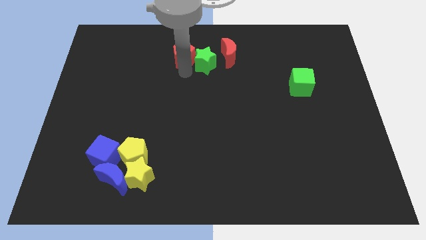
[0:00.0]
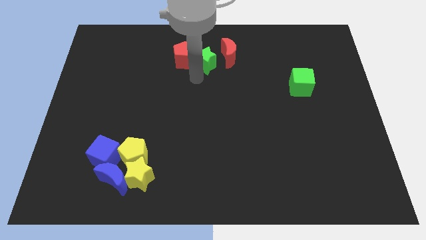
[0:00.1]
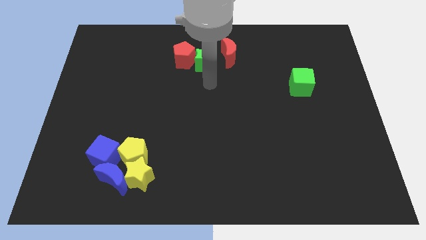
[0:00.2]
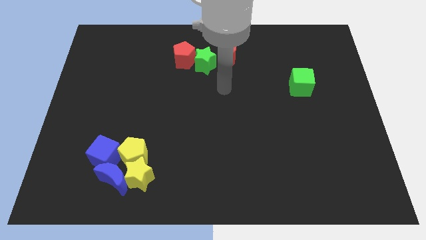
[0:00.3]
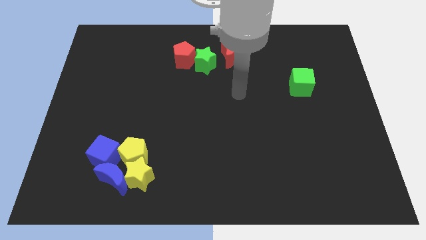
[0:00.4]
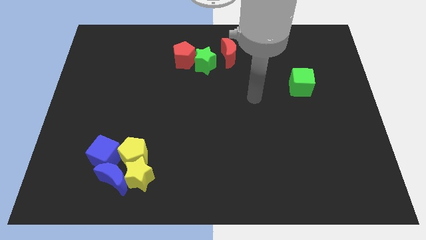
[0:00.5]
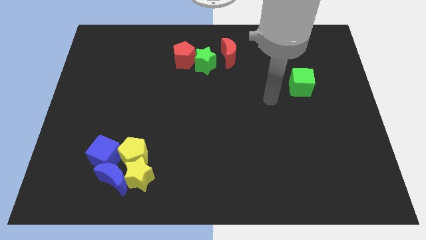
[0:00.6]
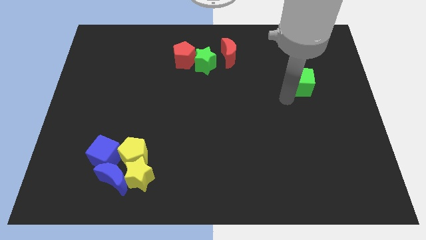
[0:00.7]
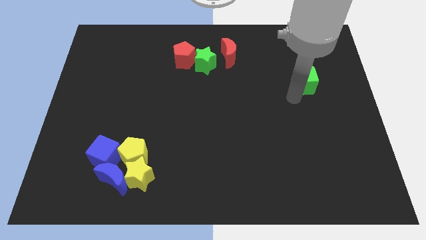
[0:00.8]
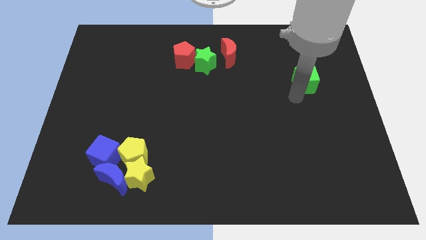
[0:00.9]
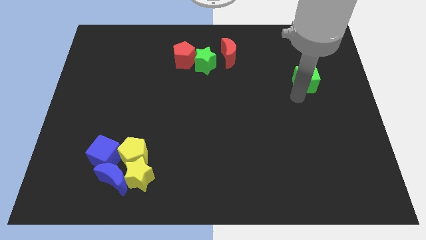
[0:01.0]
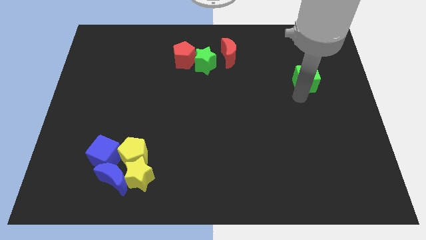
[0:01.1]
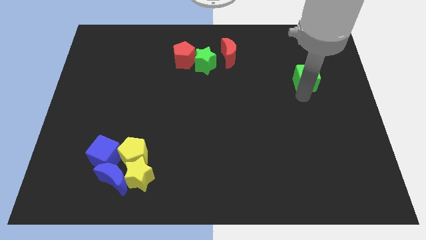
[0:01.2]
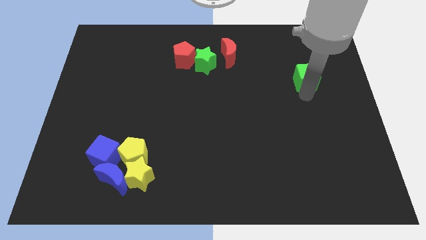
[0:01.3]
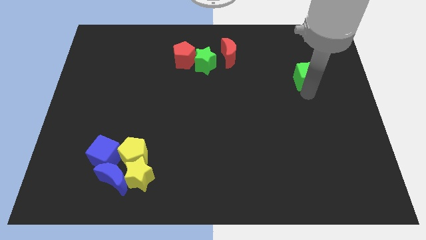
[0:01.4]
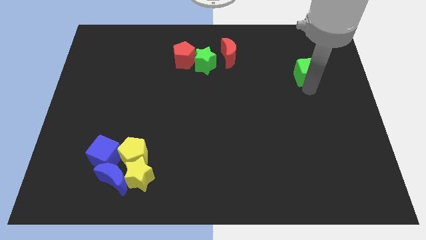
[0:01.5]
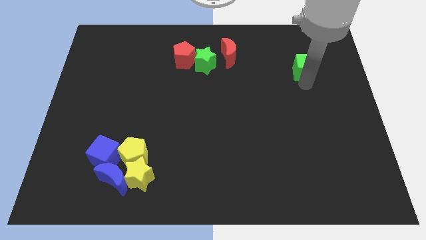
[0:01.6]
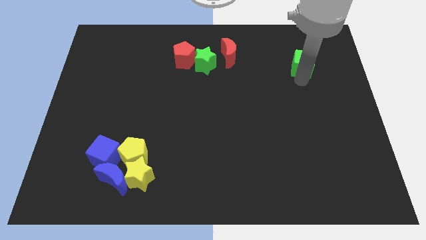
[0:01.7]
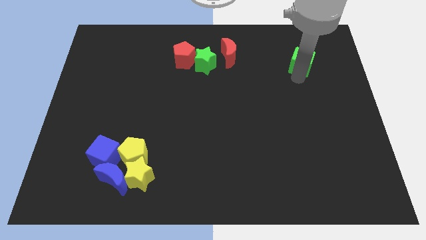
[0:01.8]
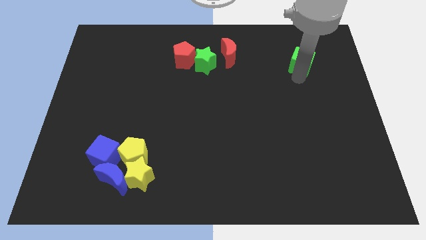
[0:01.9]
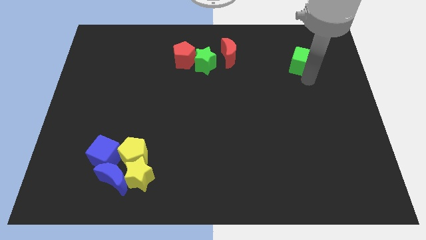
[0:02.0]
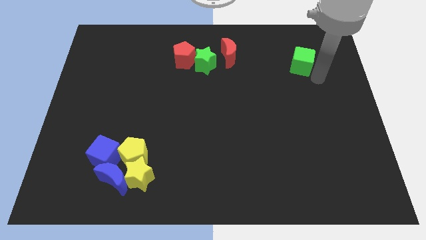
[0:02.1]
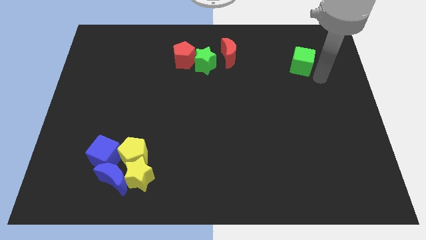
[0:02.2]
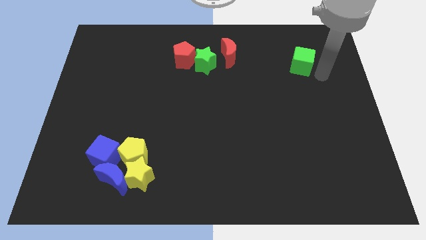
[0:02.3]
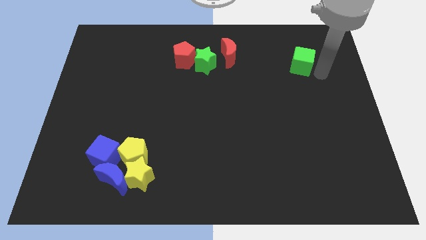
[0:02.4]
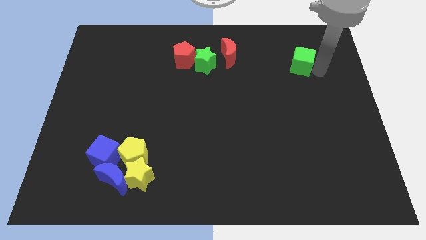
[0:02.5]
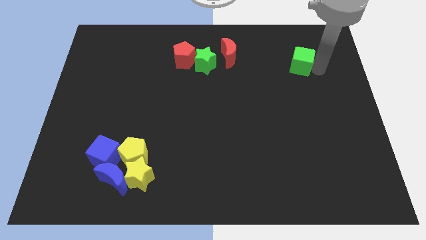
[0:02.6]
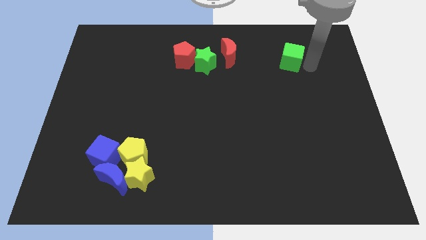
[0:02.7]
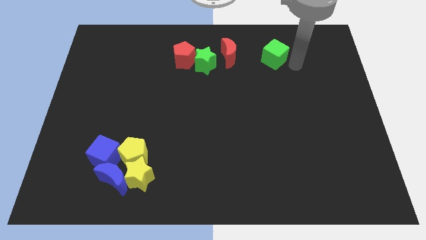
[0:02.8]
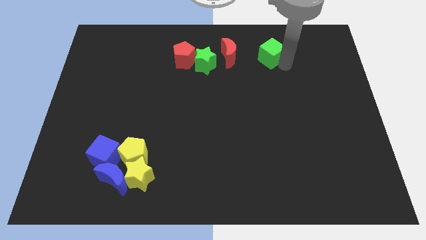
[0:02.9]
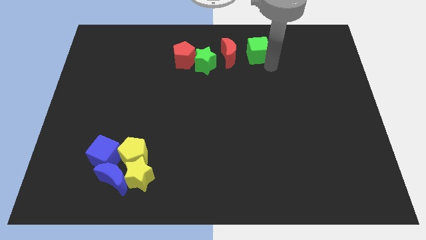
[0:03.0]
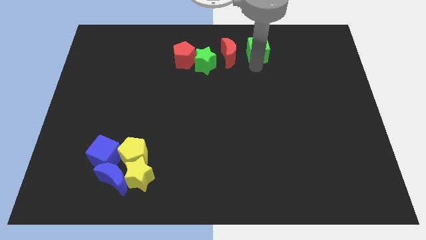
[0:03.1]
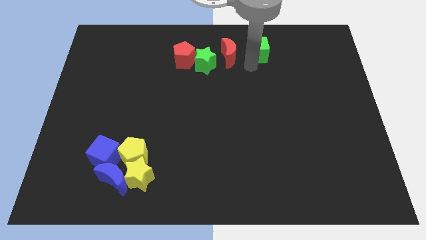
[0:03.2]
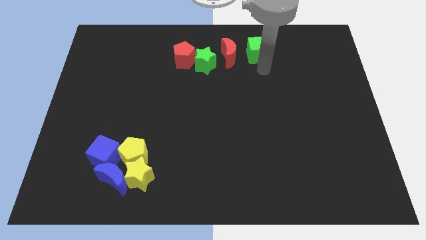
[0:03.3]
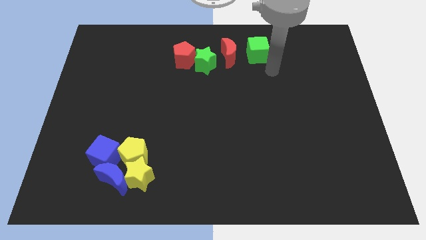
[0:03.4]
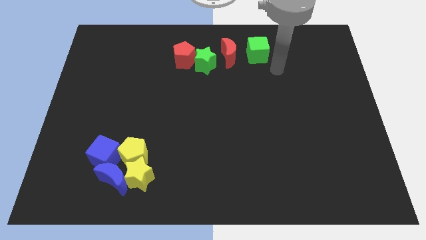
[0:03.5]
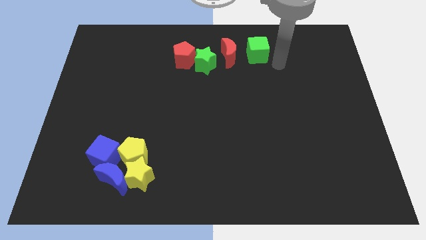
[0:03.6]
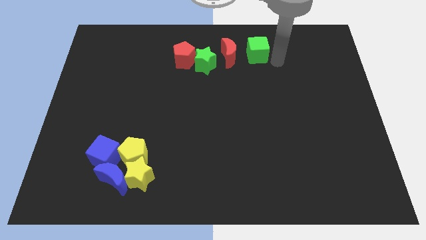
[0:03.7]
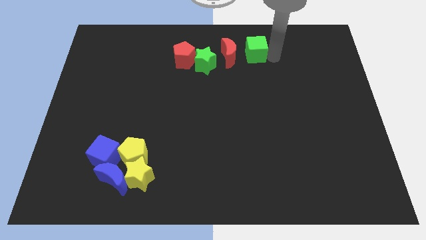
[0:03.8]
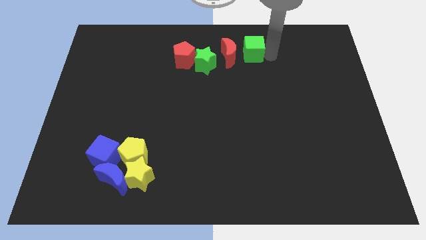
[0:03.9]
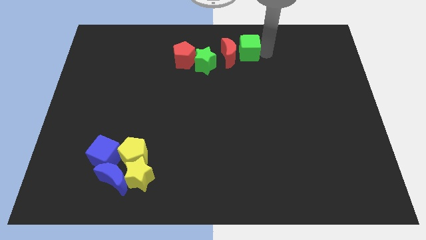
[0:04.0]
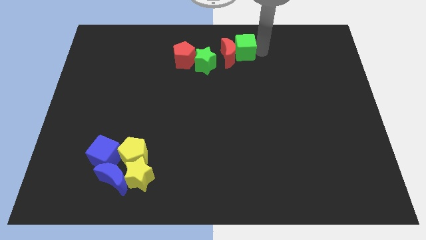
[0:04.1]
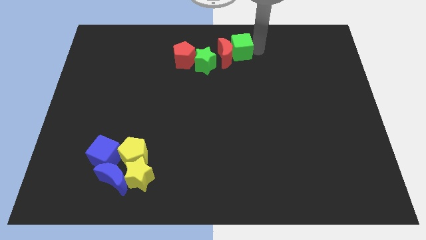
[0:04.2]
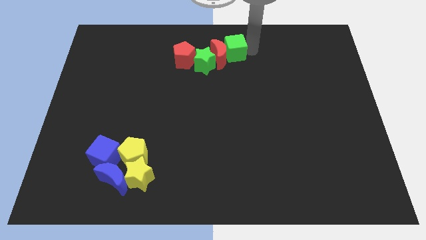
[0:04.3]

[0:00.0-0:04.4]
push the green cube to the right of the red crescent

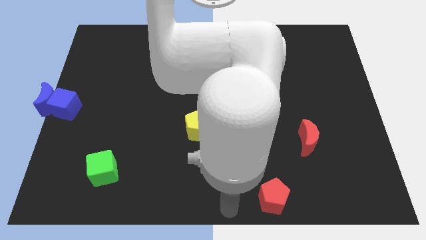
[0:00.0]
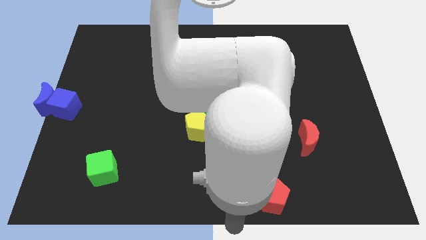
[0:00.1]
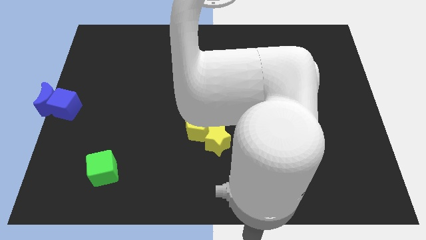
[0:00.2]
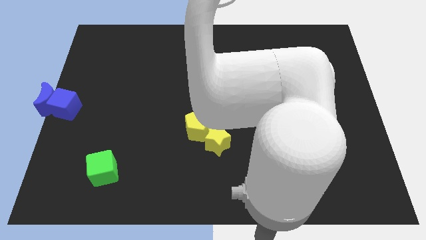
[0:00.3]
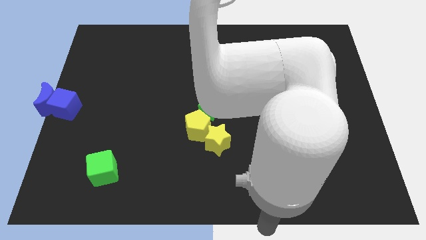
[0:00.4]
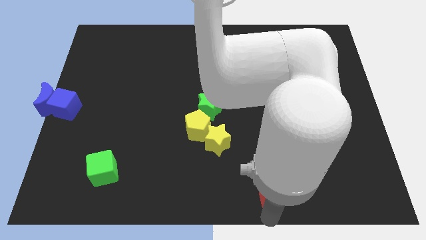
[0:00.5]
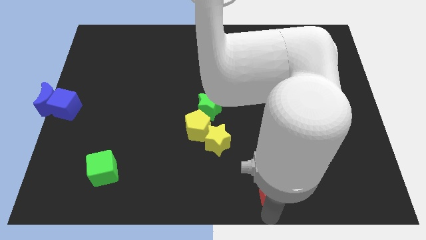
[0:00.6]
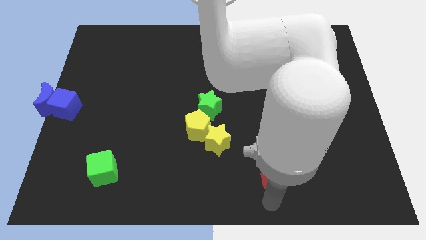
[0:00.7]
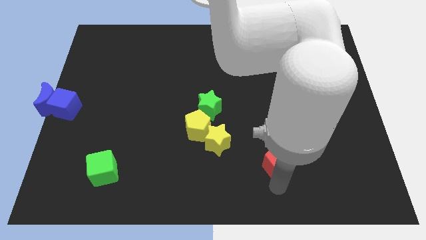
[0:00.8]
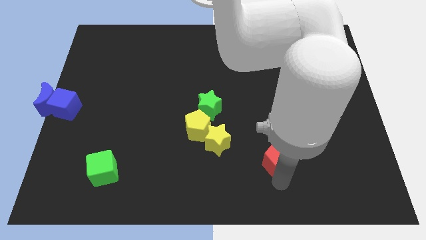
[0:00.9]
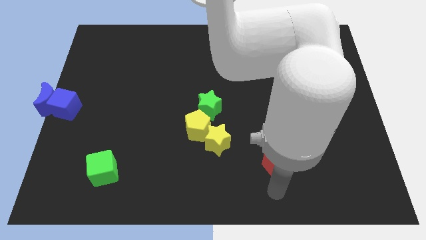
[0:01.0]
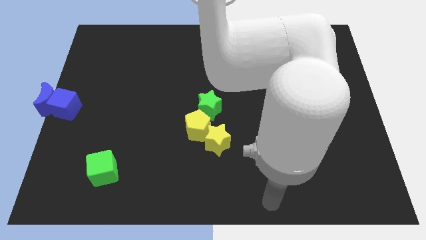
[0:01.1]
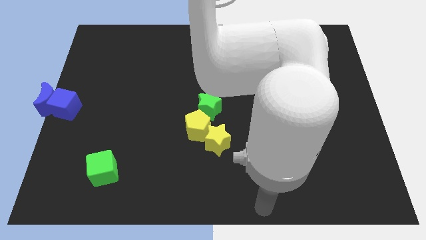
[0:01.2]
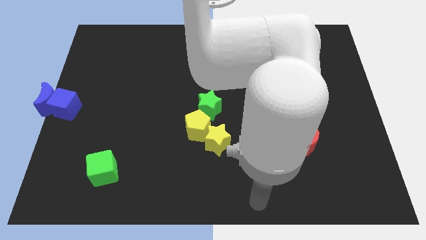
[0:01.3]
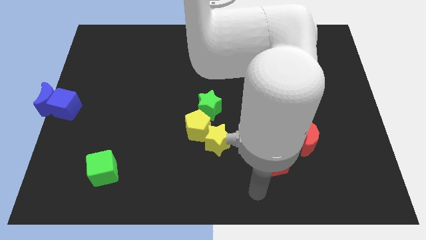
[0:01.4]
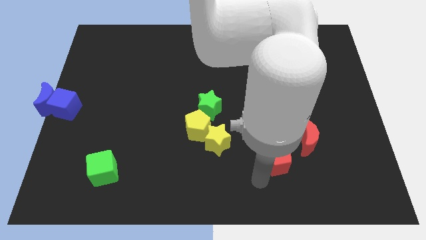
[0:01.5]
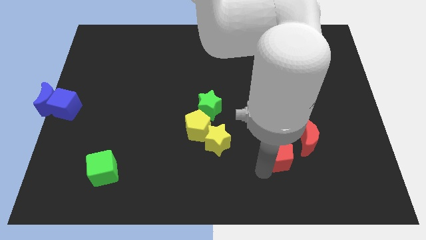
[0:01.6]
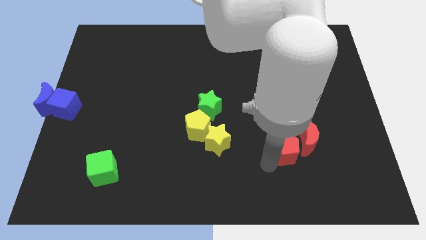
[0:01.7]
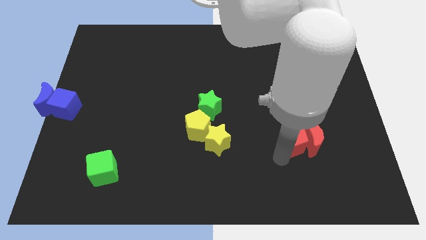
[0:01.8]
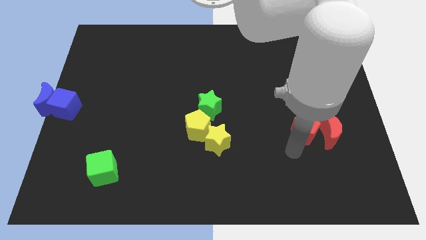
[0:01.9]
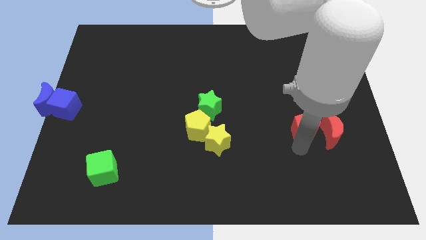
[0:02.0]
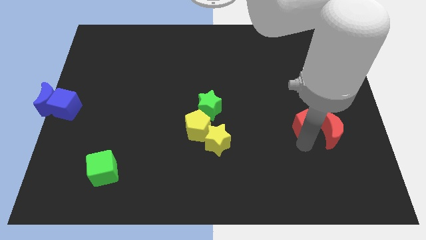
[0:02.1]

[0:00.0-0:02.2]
push red pentagon to the left of the red crescent

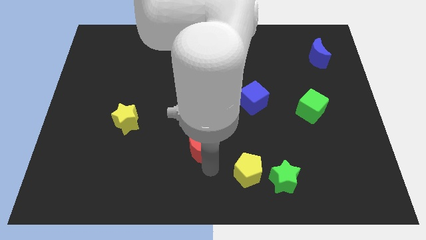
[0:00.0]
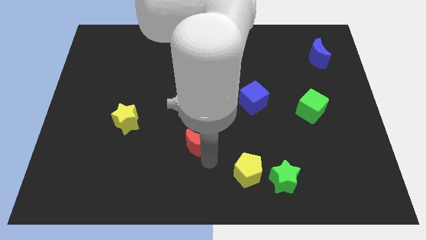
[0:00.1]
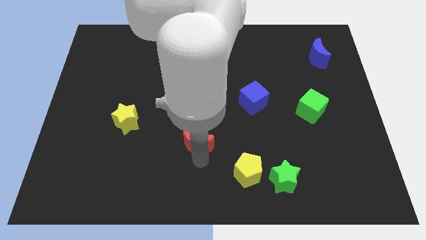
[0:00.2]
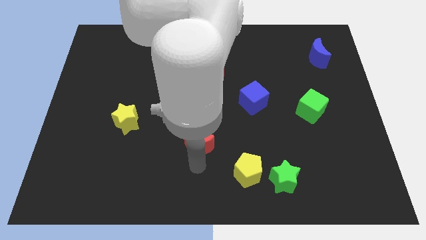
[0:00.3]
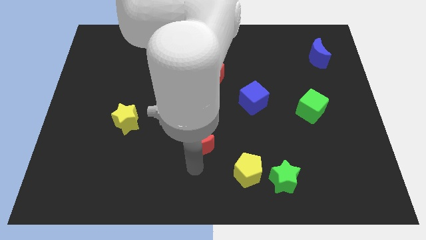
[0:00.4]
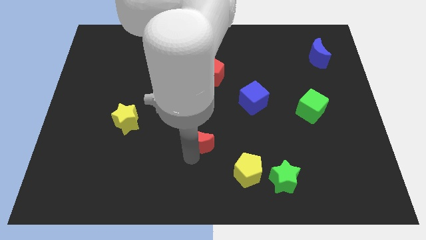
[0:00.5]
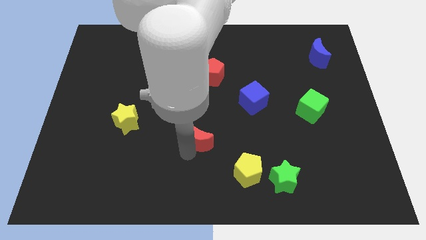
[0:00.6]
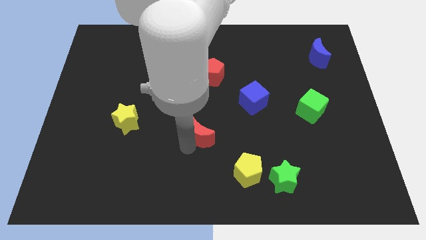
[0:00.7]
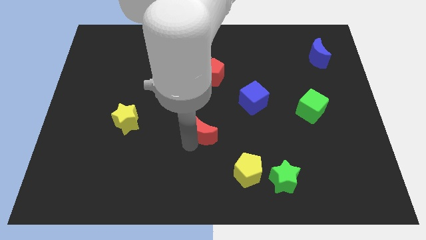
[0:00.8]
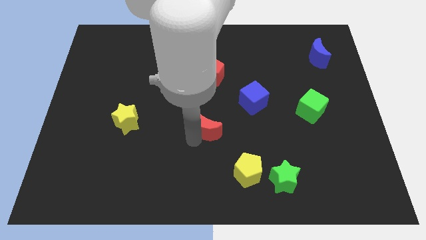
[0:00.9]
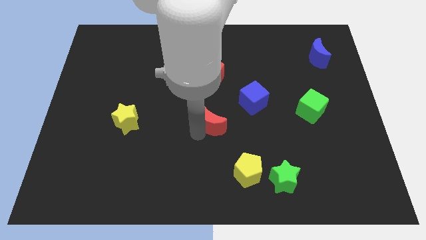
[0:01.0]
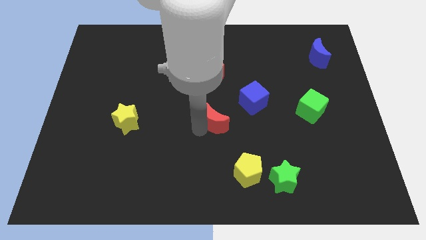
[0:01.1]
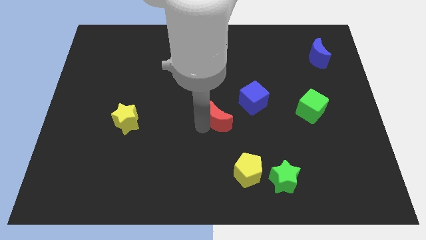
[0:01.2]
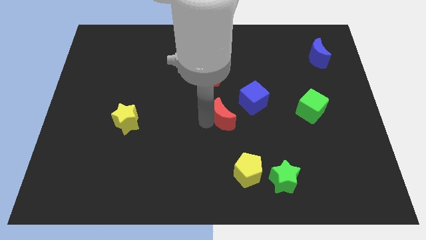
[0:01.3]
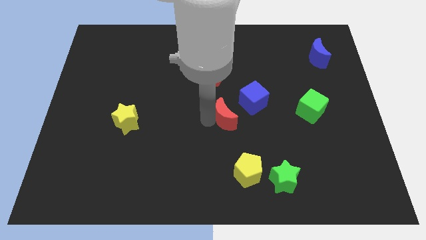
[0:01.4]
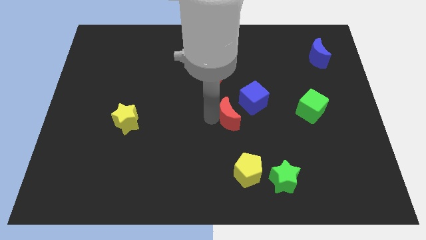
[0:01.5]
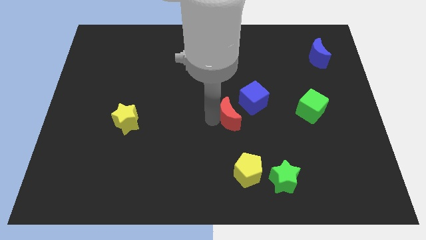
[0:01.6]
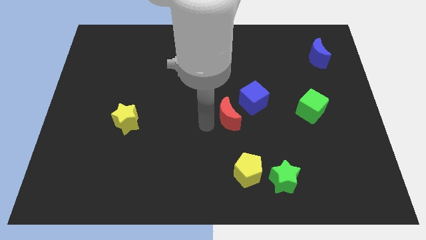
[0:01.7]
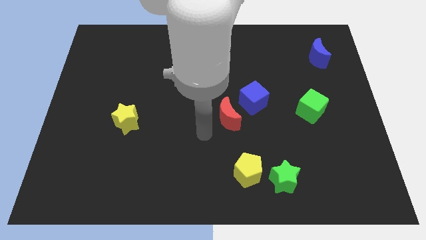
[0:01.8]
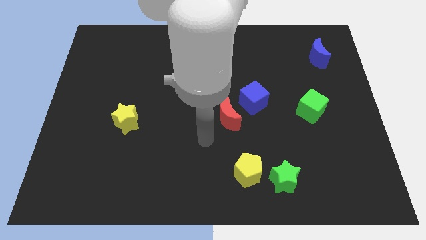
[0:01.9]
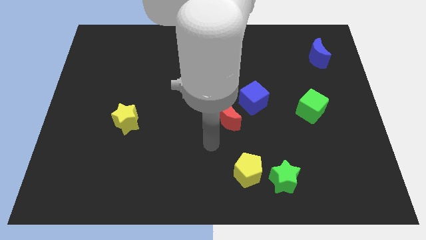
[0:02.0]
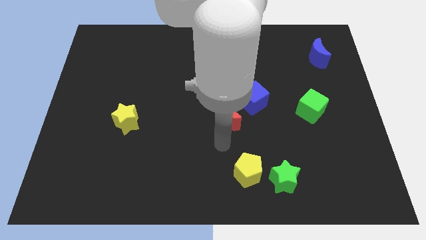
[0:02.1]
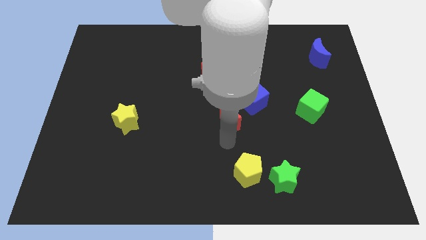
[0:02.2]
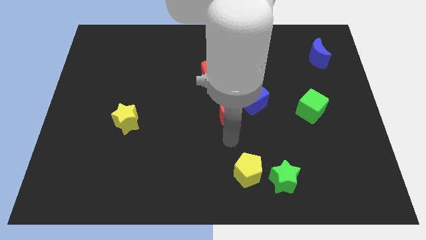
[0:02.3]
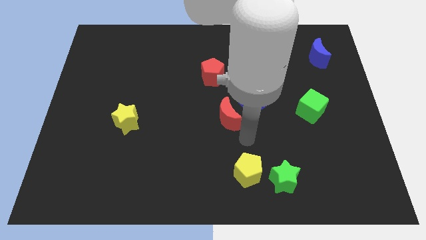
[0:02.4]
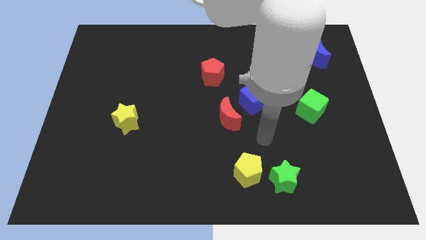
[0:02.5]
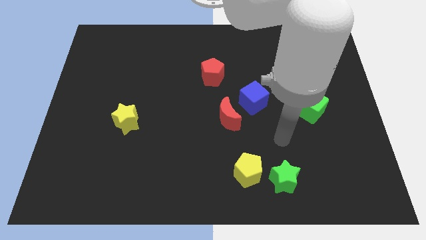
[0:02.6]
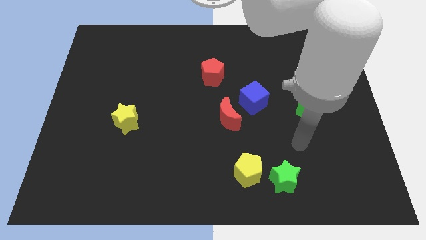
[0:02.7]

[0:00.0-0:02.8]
move the red crescent to the left of the blue cube
